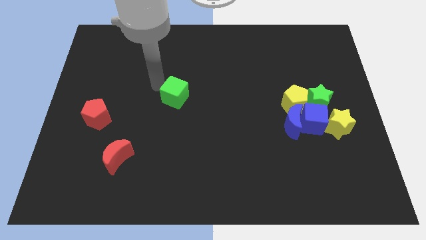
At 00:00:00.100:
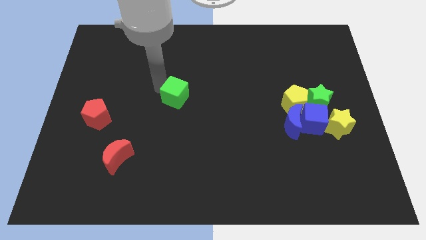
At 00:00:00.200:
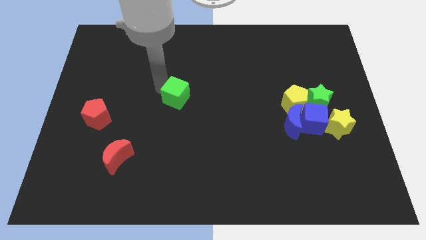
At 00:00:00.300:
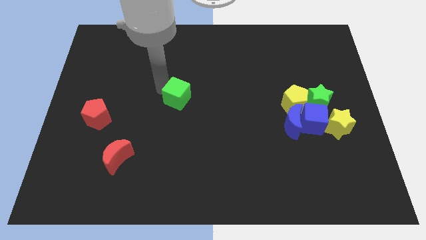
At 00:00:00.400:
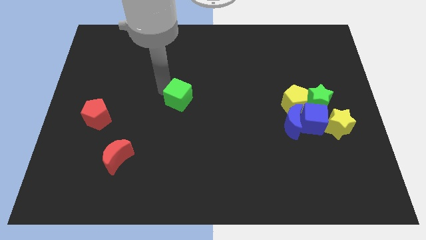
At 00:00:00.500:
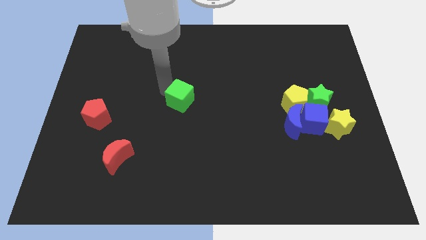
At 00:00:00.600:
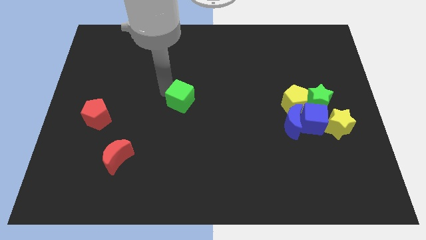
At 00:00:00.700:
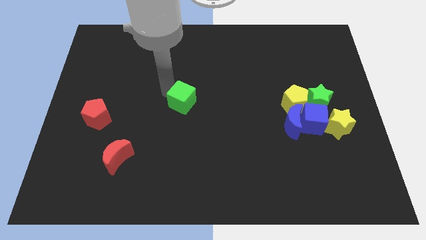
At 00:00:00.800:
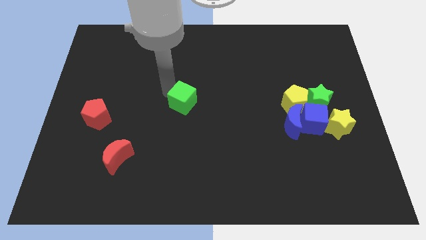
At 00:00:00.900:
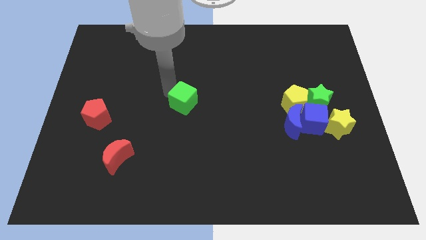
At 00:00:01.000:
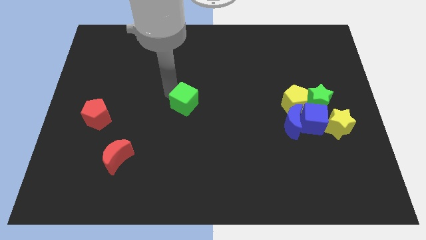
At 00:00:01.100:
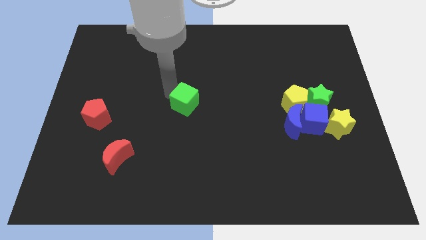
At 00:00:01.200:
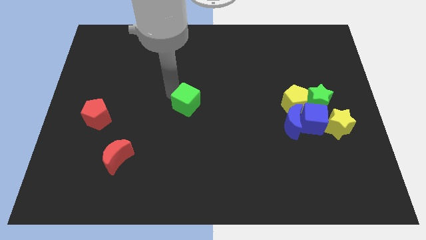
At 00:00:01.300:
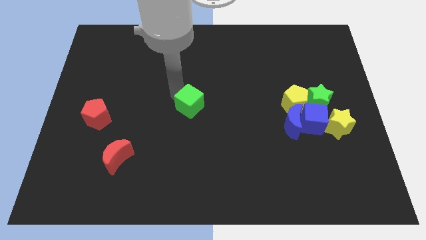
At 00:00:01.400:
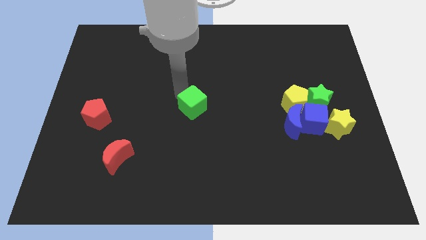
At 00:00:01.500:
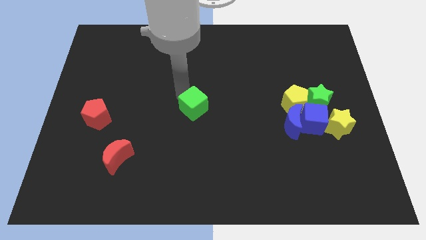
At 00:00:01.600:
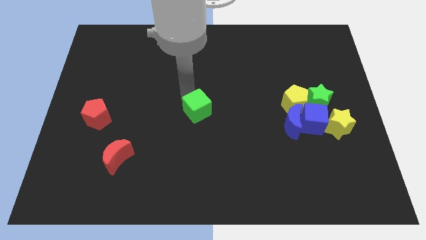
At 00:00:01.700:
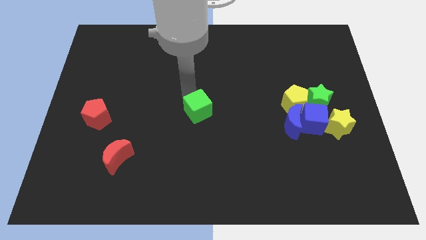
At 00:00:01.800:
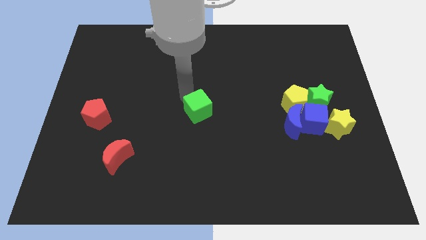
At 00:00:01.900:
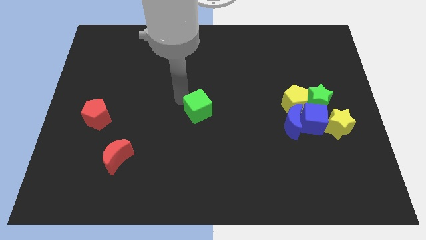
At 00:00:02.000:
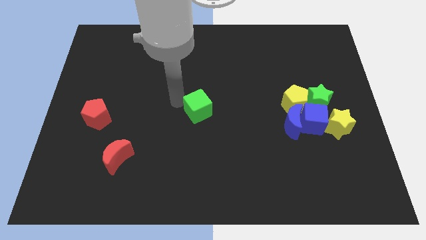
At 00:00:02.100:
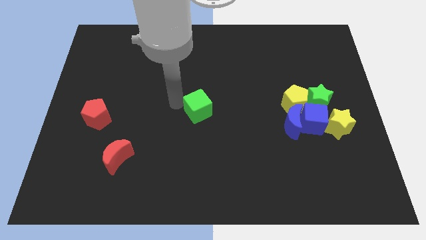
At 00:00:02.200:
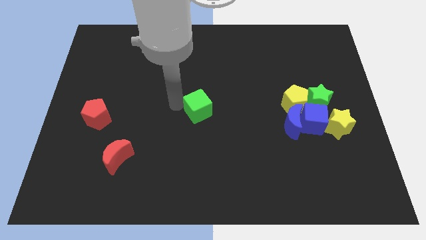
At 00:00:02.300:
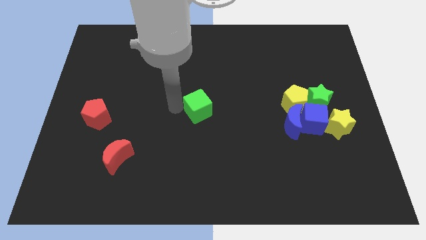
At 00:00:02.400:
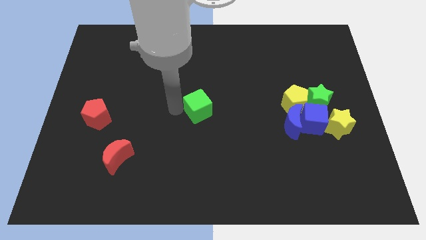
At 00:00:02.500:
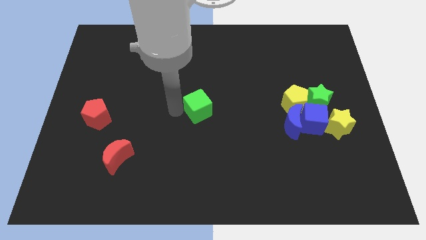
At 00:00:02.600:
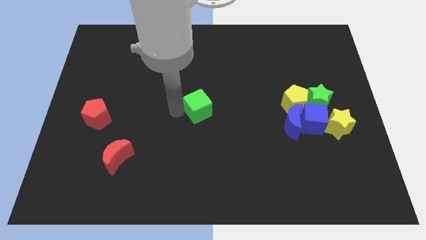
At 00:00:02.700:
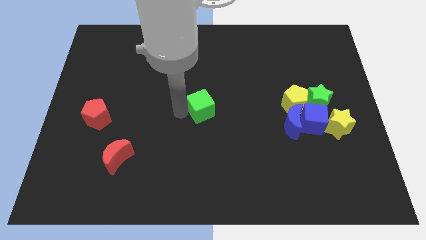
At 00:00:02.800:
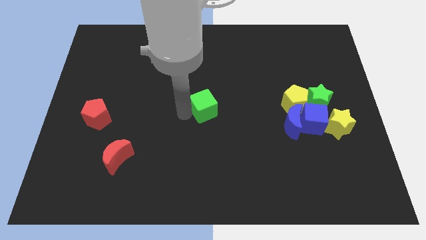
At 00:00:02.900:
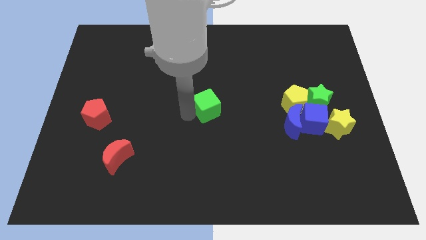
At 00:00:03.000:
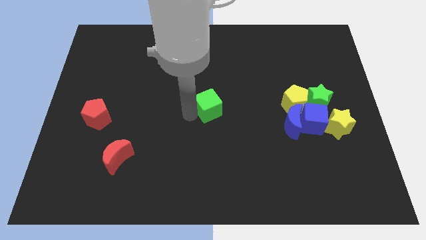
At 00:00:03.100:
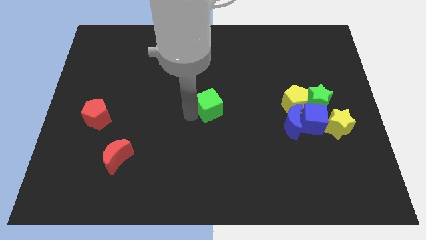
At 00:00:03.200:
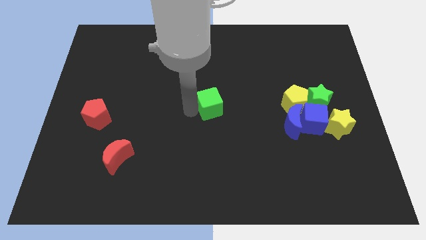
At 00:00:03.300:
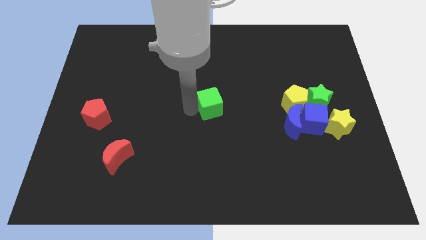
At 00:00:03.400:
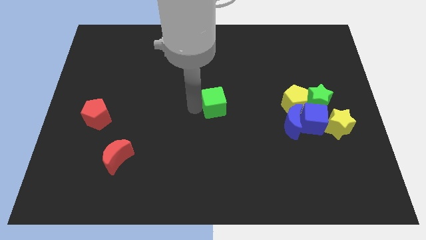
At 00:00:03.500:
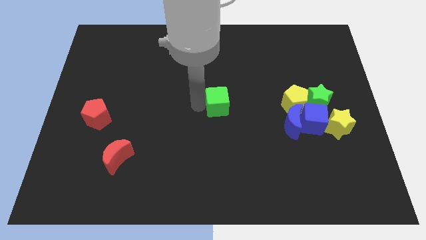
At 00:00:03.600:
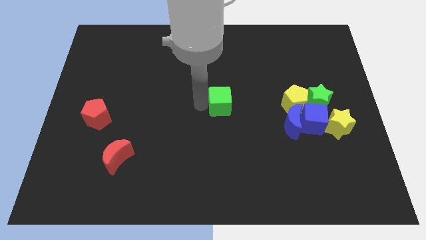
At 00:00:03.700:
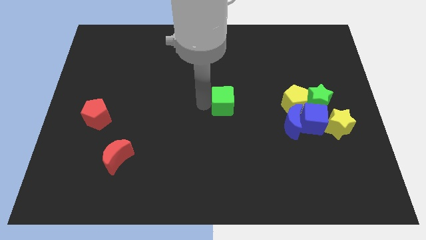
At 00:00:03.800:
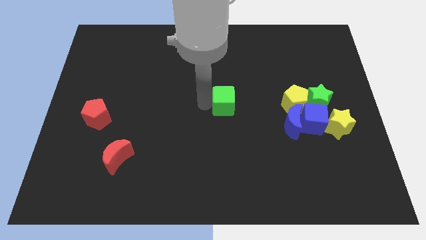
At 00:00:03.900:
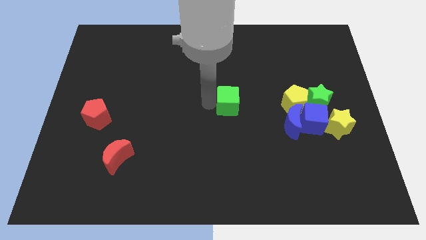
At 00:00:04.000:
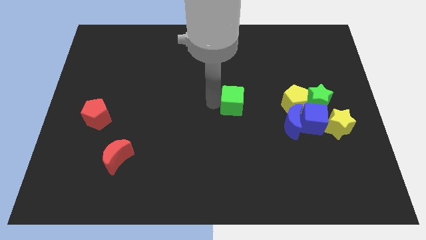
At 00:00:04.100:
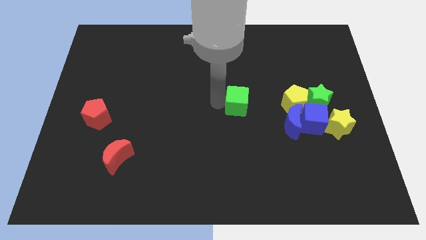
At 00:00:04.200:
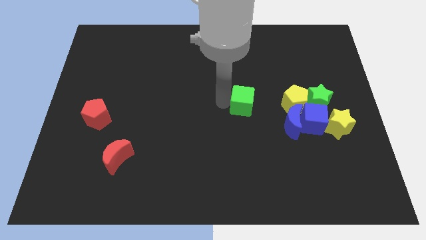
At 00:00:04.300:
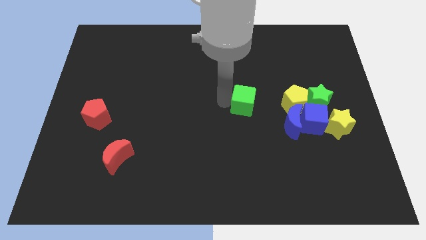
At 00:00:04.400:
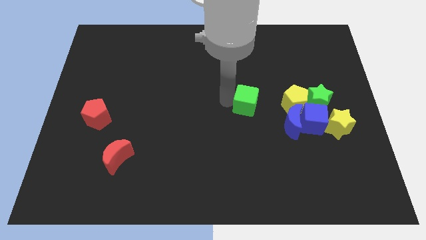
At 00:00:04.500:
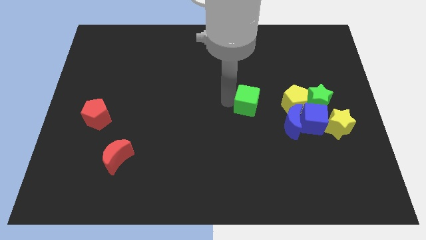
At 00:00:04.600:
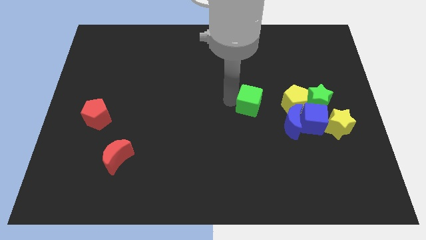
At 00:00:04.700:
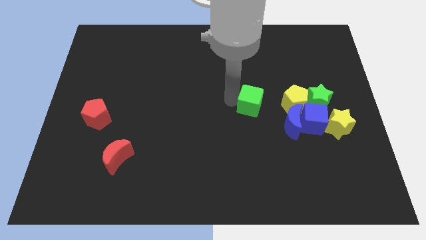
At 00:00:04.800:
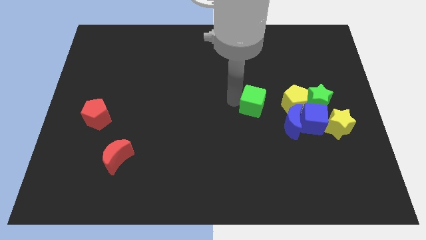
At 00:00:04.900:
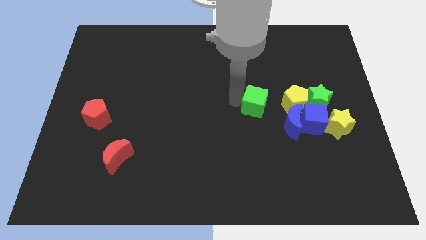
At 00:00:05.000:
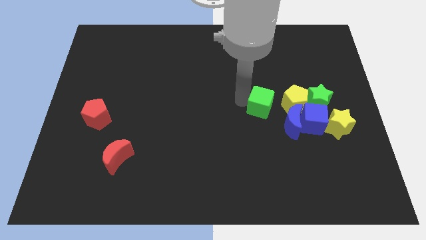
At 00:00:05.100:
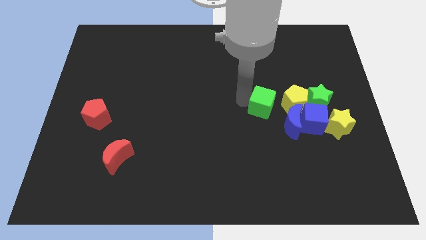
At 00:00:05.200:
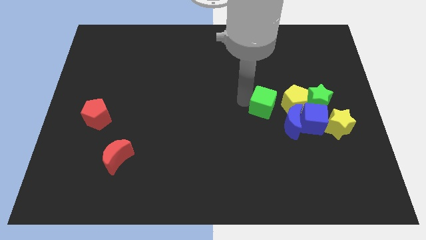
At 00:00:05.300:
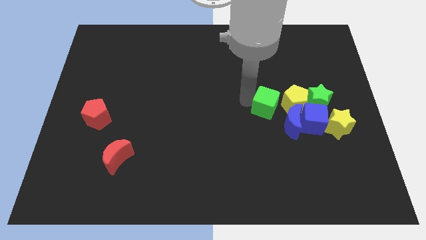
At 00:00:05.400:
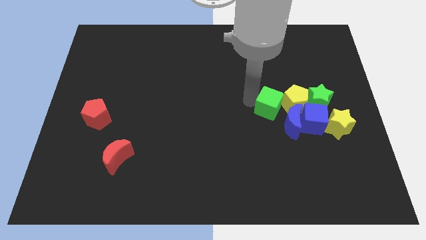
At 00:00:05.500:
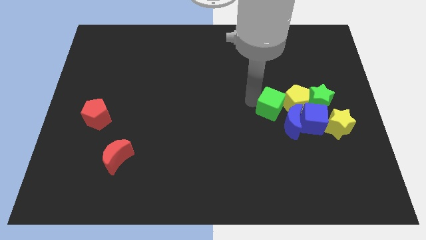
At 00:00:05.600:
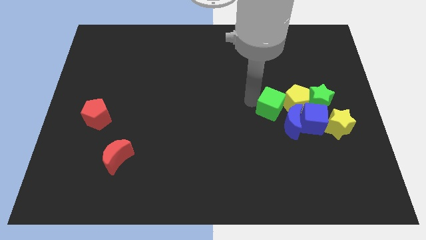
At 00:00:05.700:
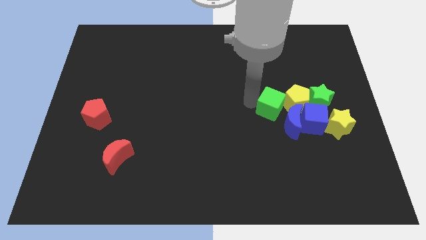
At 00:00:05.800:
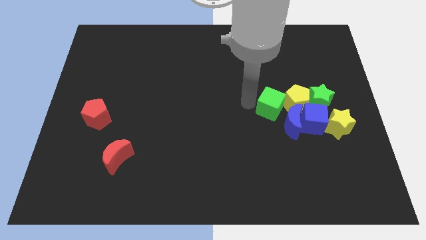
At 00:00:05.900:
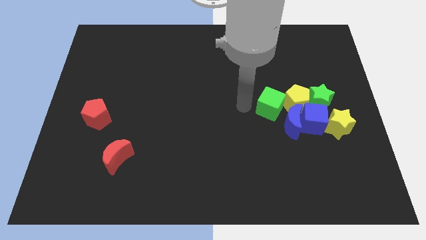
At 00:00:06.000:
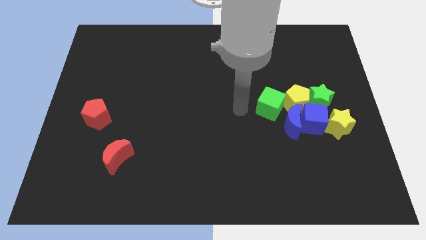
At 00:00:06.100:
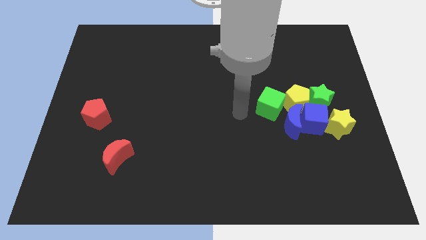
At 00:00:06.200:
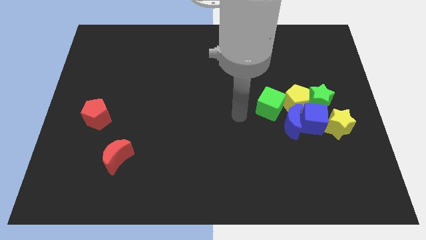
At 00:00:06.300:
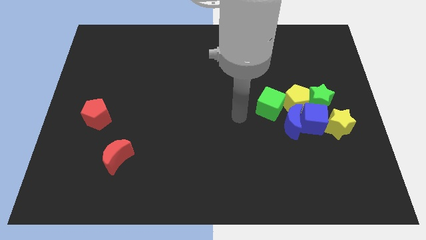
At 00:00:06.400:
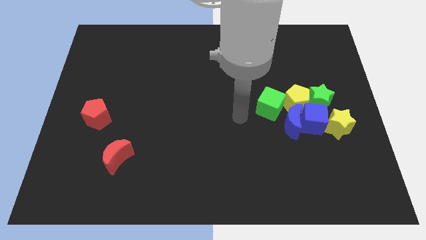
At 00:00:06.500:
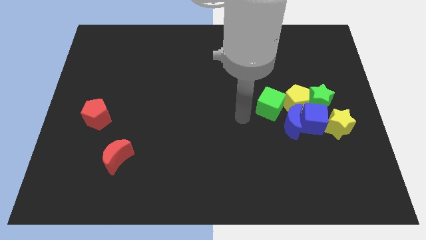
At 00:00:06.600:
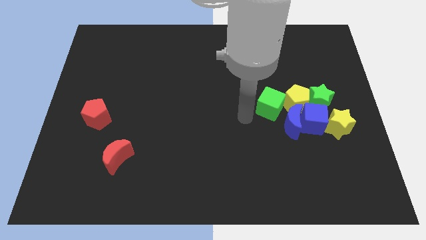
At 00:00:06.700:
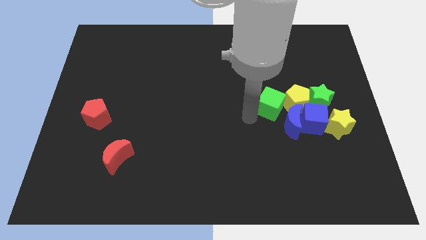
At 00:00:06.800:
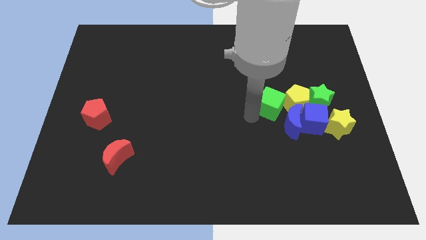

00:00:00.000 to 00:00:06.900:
drag green cube into group of blocks

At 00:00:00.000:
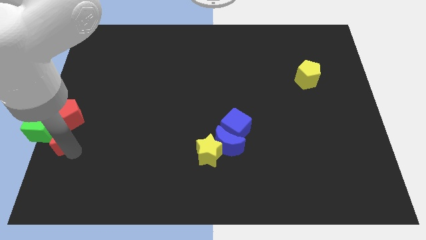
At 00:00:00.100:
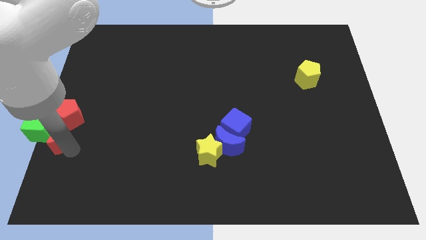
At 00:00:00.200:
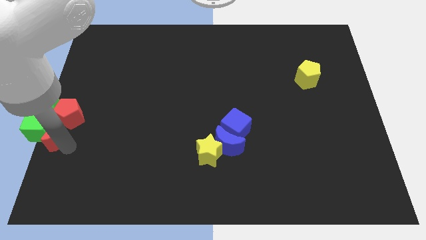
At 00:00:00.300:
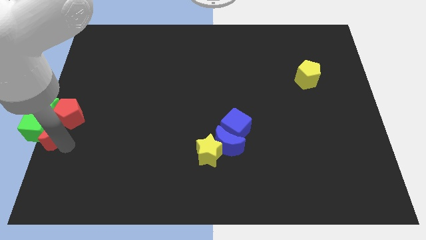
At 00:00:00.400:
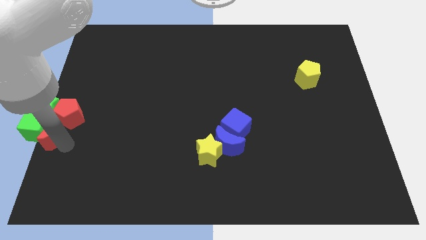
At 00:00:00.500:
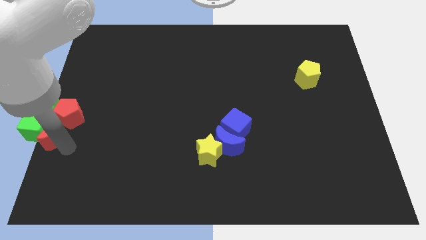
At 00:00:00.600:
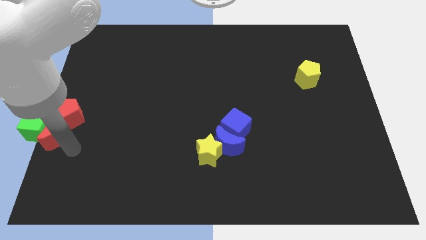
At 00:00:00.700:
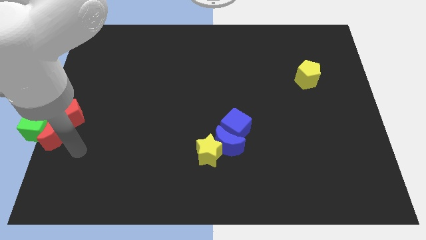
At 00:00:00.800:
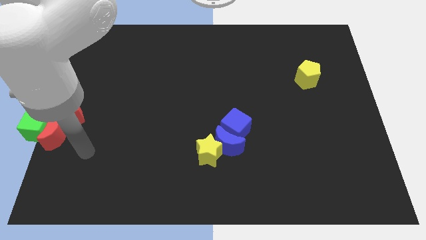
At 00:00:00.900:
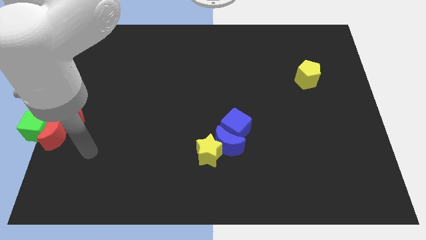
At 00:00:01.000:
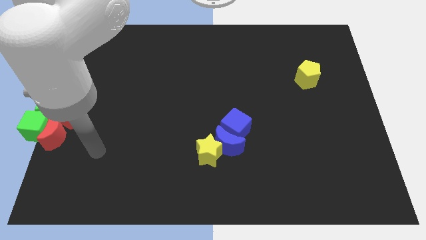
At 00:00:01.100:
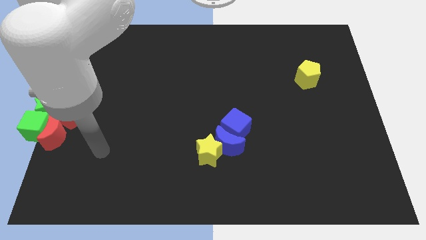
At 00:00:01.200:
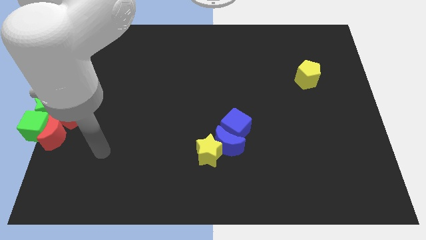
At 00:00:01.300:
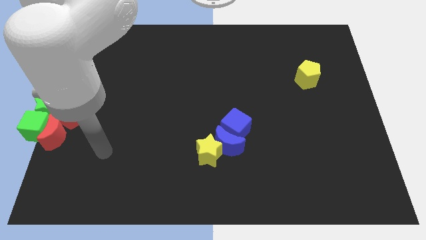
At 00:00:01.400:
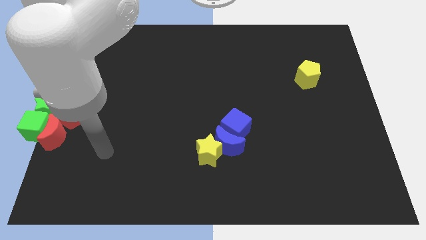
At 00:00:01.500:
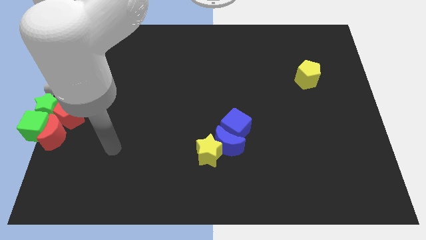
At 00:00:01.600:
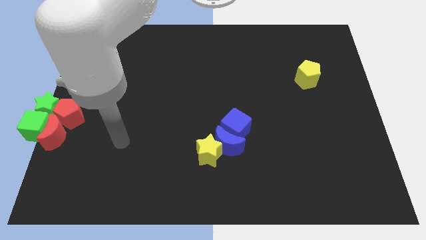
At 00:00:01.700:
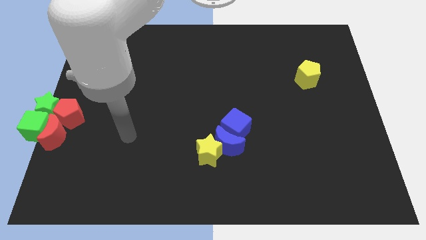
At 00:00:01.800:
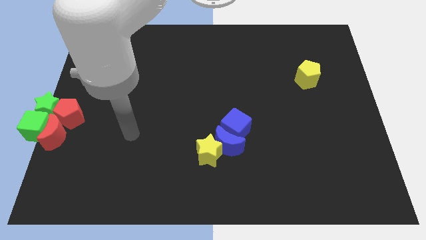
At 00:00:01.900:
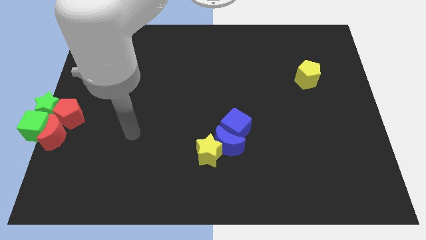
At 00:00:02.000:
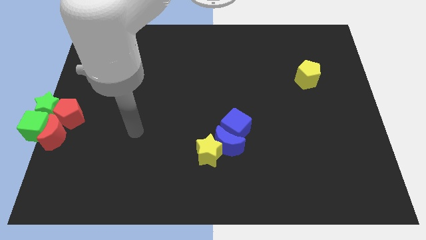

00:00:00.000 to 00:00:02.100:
move your arm away from the blocks
